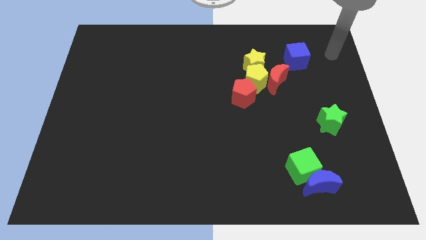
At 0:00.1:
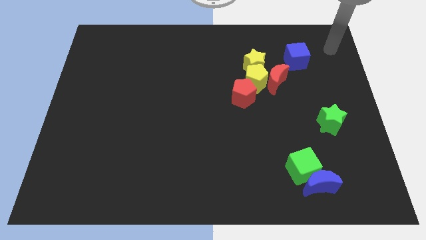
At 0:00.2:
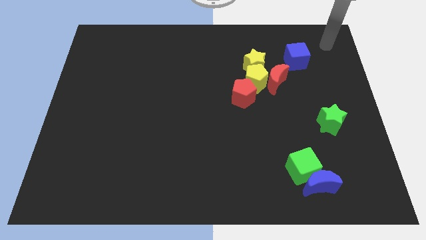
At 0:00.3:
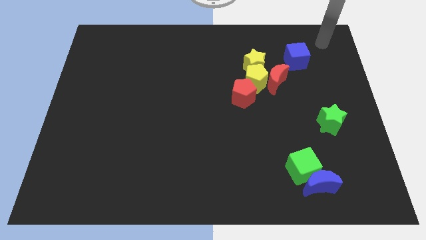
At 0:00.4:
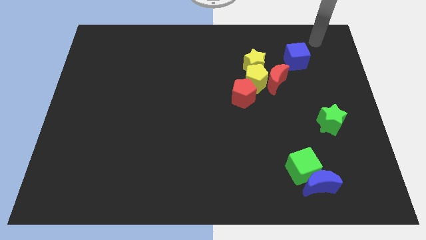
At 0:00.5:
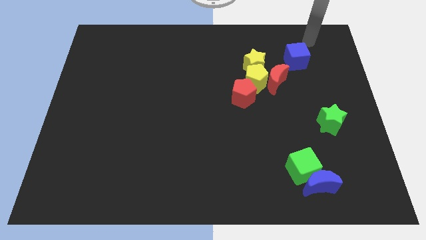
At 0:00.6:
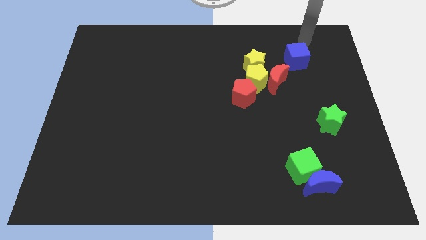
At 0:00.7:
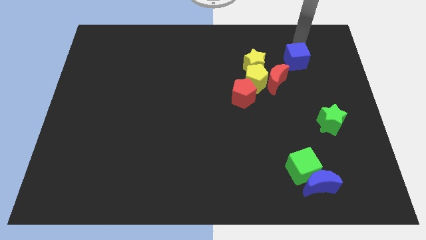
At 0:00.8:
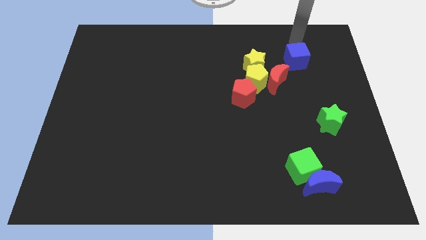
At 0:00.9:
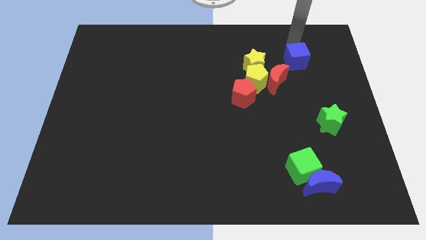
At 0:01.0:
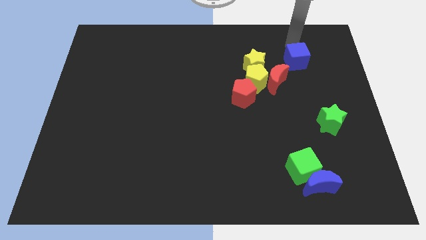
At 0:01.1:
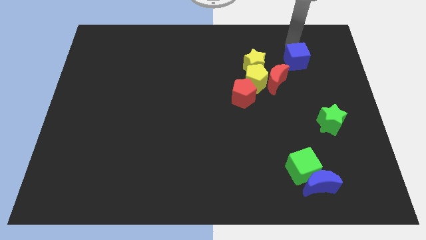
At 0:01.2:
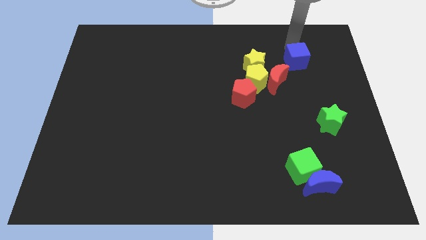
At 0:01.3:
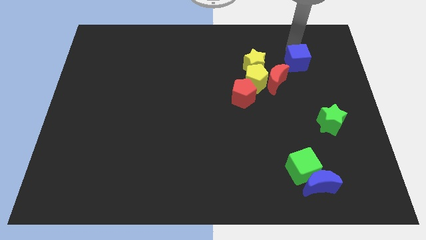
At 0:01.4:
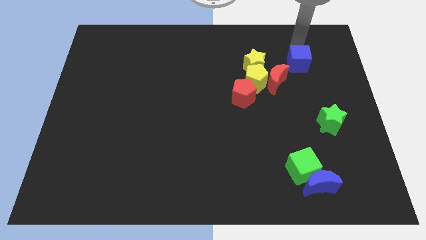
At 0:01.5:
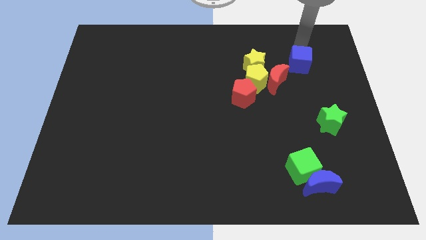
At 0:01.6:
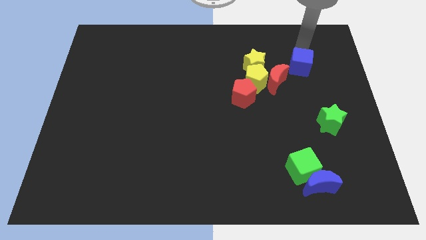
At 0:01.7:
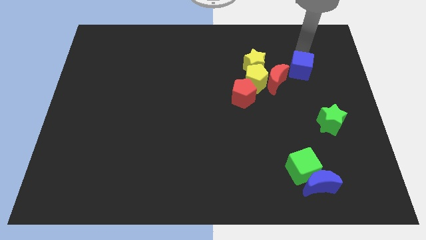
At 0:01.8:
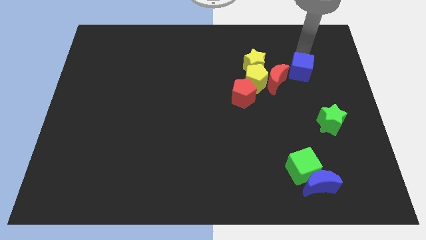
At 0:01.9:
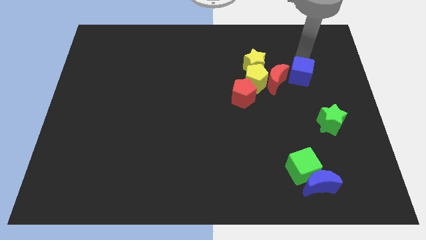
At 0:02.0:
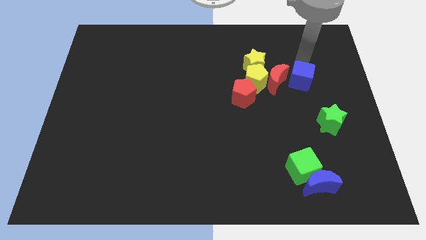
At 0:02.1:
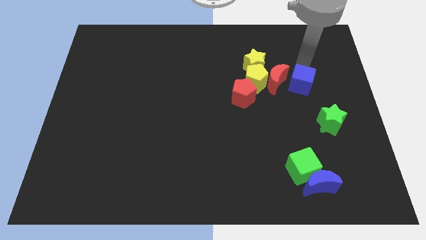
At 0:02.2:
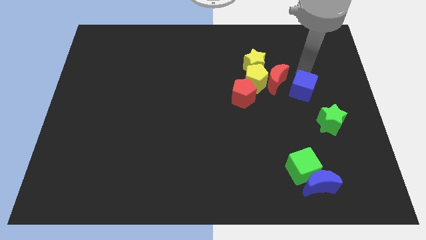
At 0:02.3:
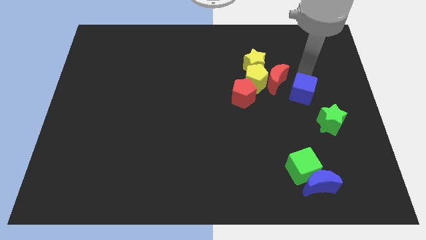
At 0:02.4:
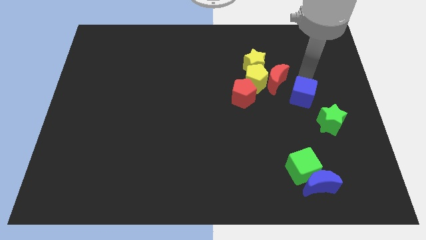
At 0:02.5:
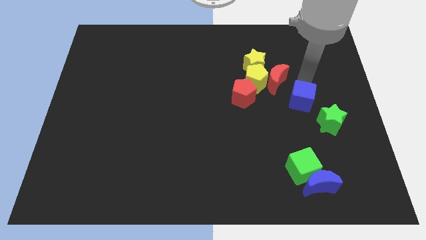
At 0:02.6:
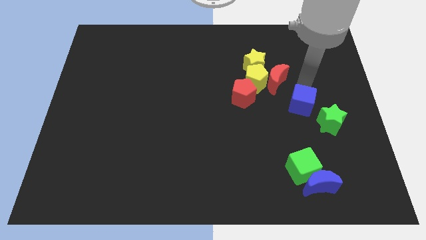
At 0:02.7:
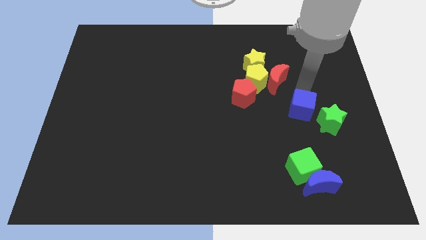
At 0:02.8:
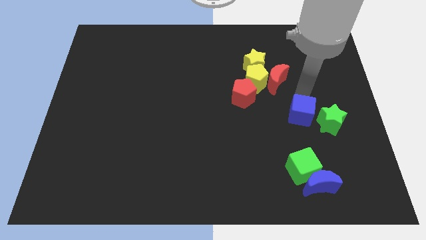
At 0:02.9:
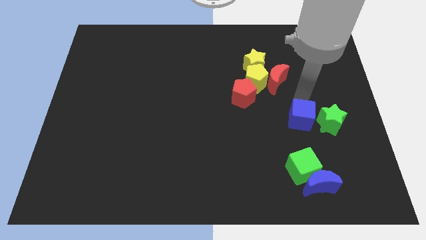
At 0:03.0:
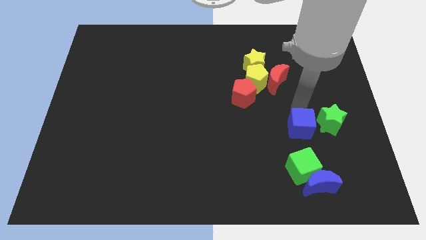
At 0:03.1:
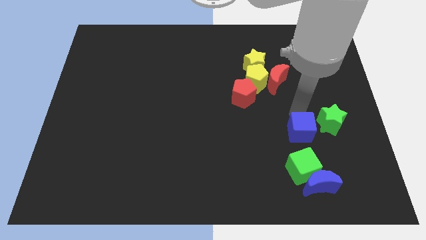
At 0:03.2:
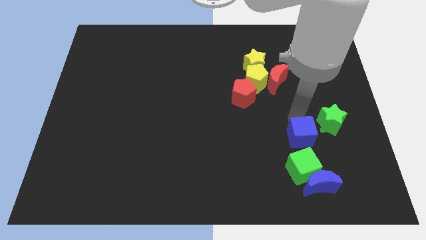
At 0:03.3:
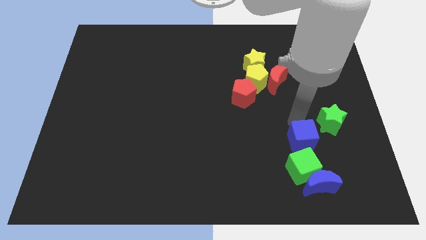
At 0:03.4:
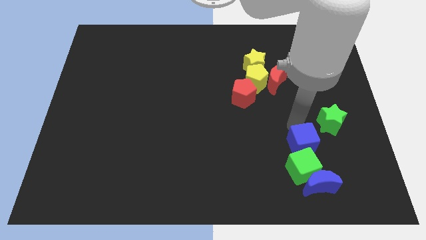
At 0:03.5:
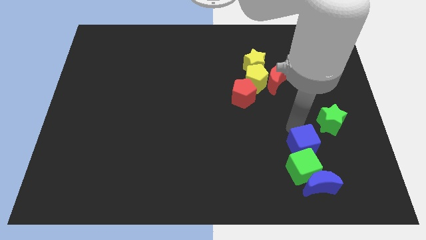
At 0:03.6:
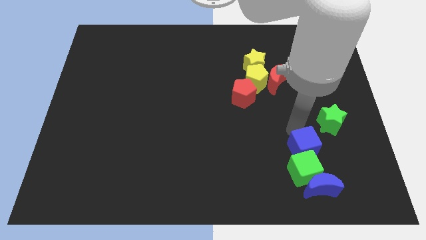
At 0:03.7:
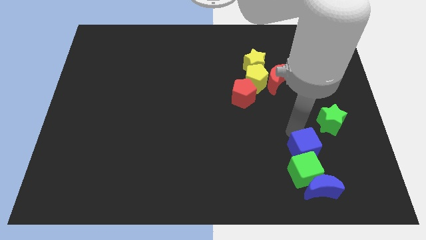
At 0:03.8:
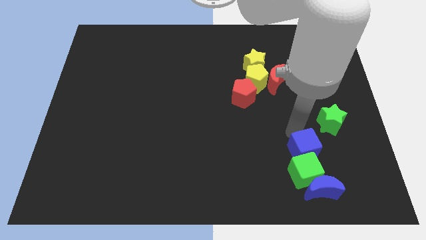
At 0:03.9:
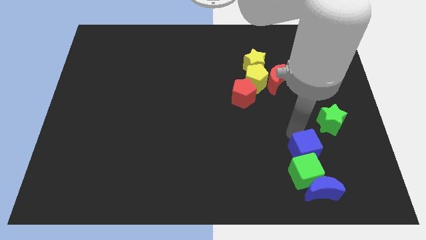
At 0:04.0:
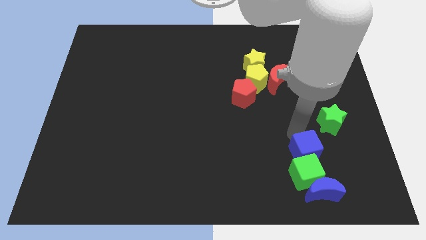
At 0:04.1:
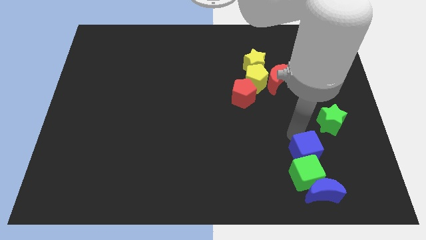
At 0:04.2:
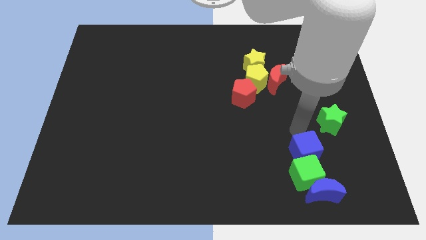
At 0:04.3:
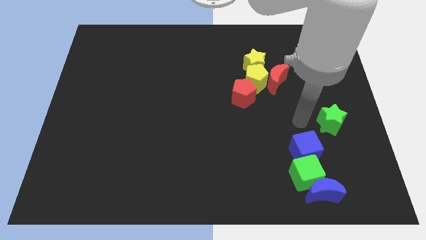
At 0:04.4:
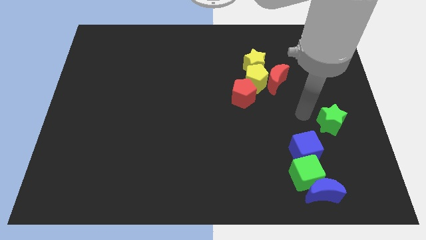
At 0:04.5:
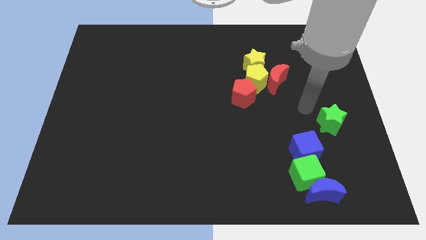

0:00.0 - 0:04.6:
push the blue cube into the top side of the green cube

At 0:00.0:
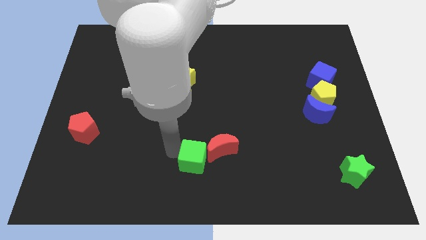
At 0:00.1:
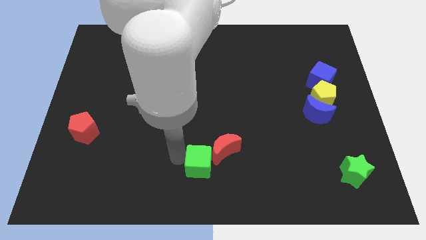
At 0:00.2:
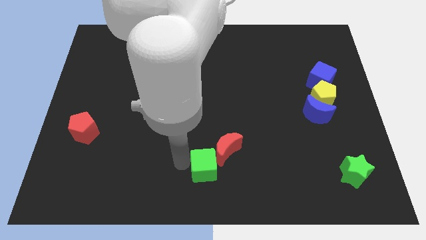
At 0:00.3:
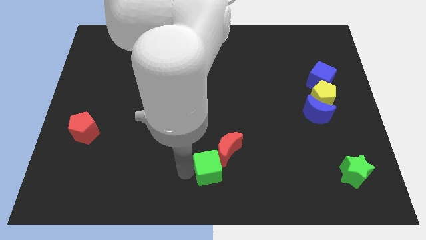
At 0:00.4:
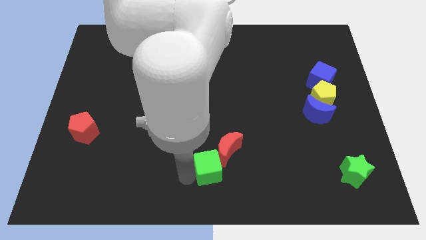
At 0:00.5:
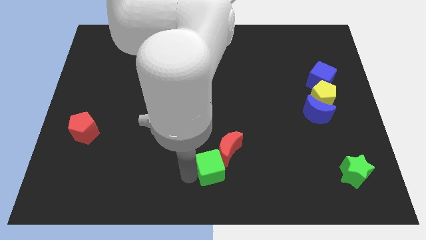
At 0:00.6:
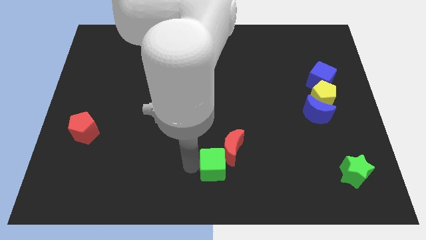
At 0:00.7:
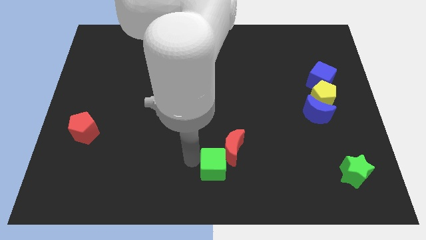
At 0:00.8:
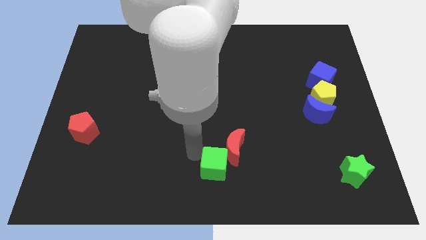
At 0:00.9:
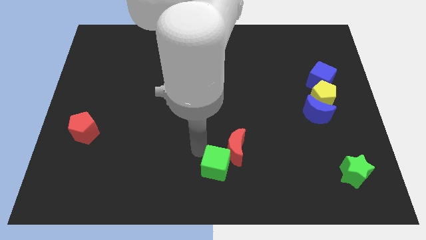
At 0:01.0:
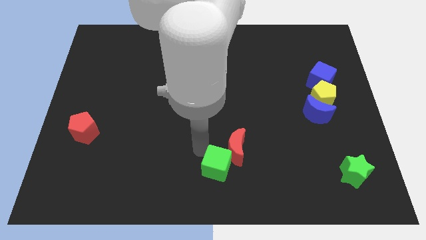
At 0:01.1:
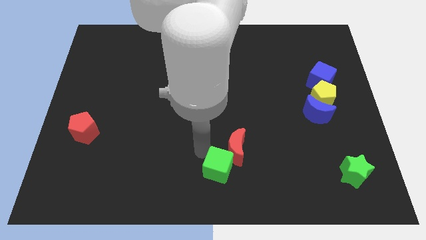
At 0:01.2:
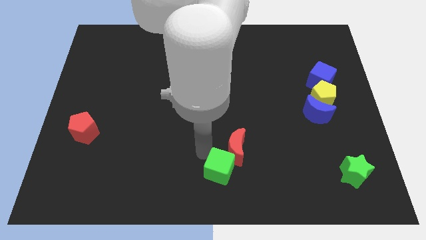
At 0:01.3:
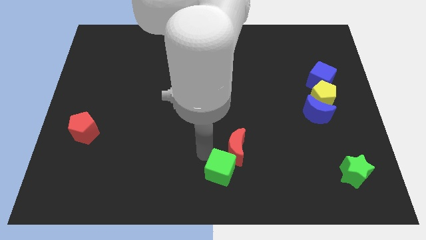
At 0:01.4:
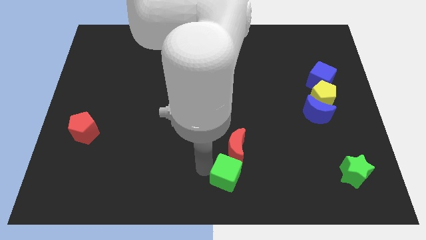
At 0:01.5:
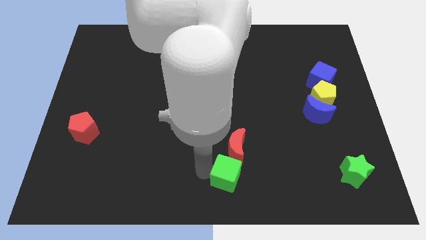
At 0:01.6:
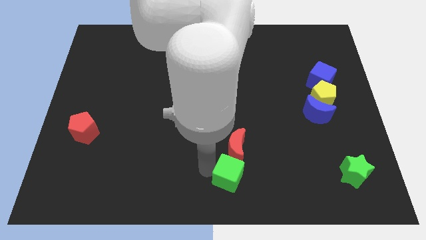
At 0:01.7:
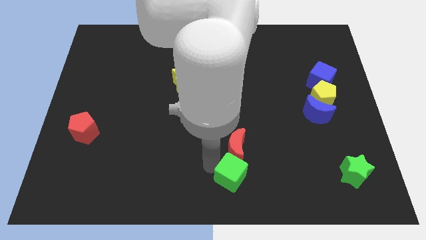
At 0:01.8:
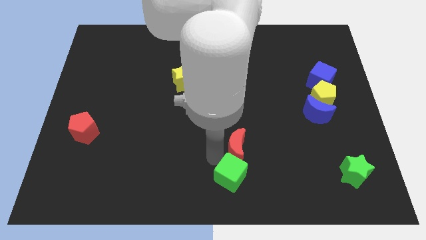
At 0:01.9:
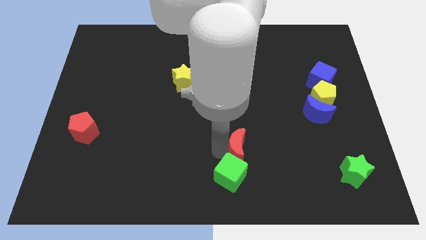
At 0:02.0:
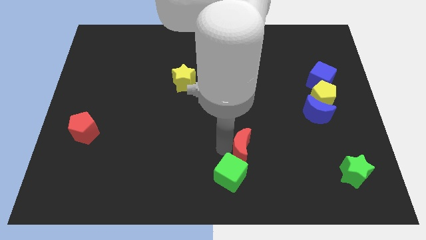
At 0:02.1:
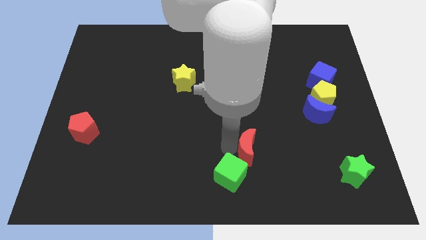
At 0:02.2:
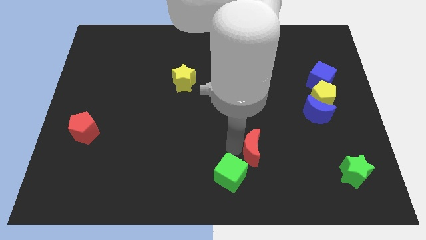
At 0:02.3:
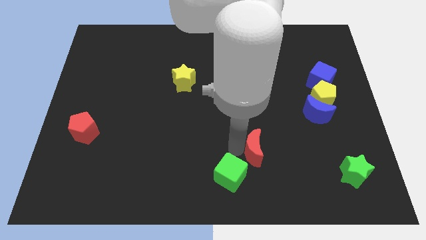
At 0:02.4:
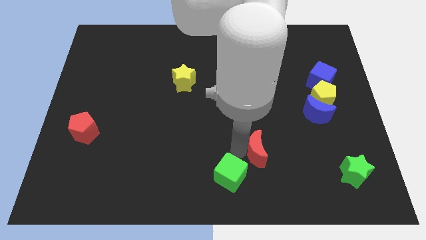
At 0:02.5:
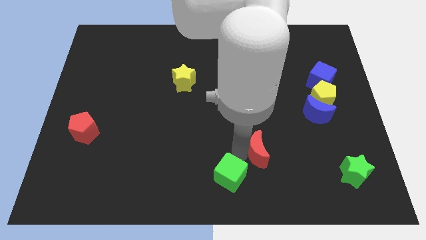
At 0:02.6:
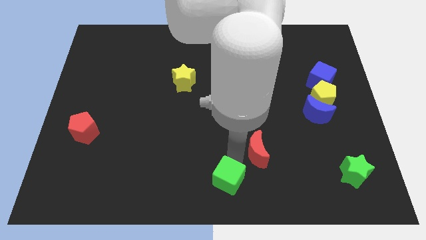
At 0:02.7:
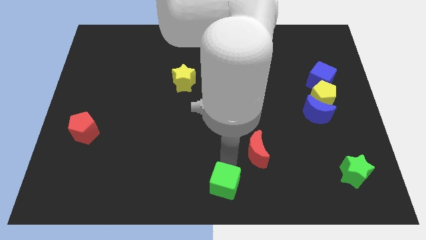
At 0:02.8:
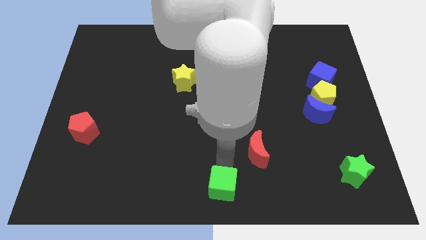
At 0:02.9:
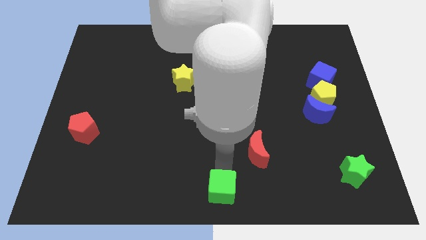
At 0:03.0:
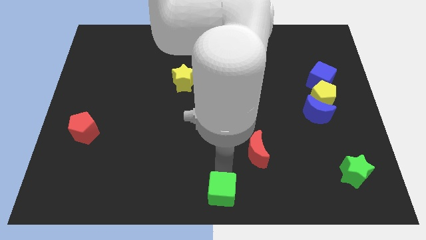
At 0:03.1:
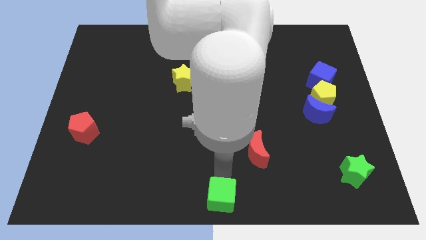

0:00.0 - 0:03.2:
separate green cube and the red moon

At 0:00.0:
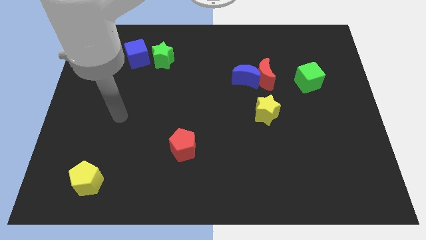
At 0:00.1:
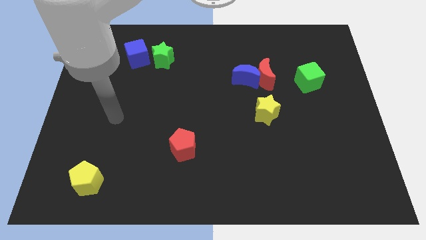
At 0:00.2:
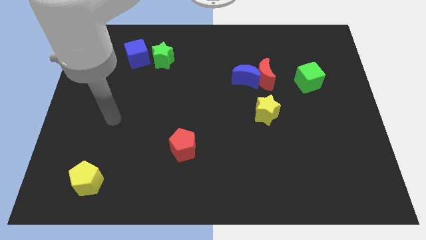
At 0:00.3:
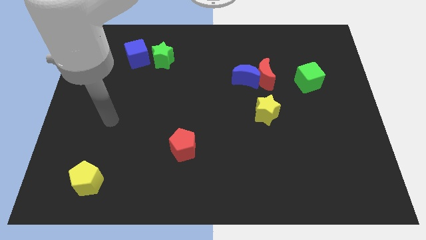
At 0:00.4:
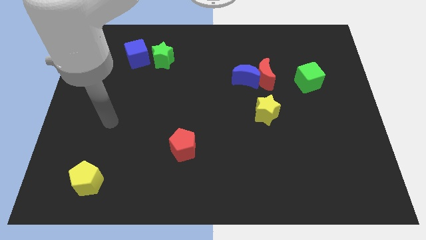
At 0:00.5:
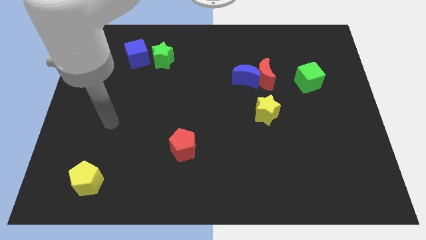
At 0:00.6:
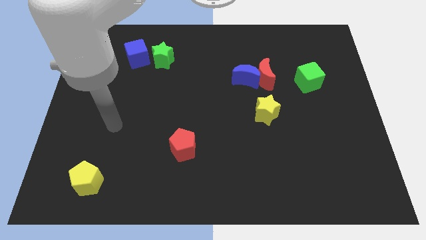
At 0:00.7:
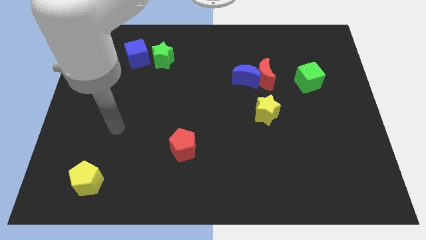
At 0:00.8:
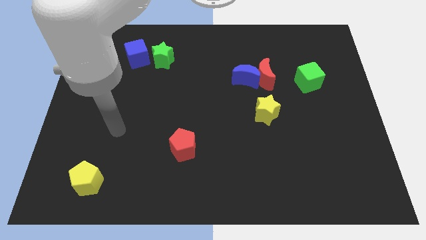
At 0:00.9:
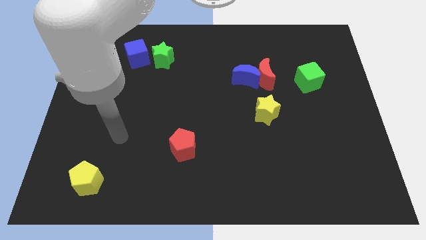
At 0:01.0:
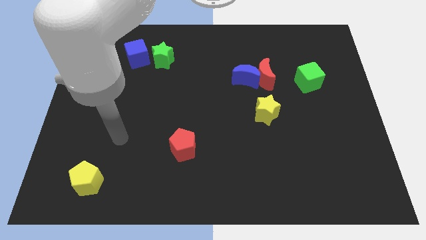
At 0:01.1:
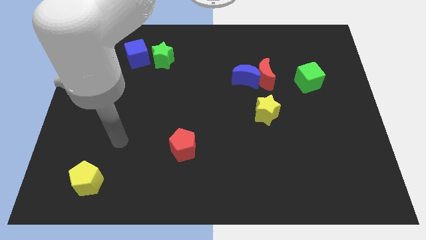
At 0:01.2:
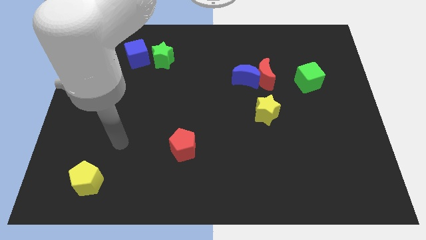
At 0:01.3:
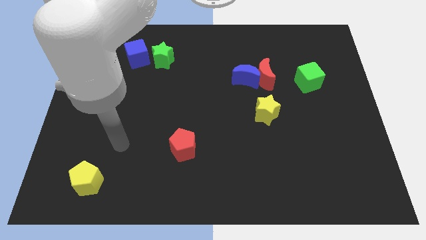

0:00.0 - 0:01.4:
place your arm at the left of the red pentagon
